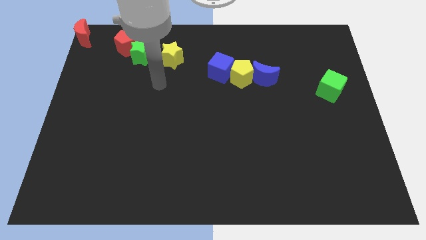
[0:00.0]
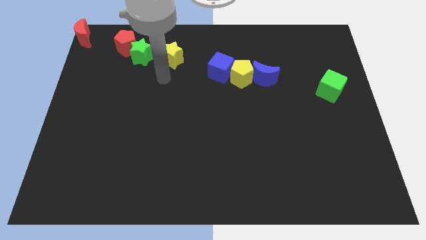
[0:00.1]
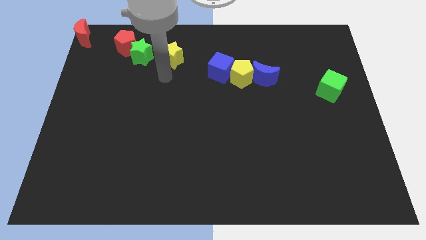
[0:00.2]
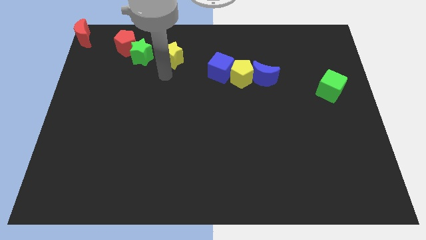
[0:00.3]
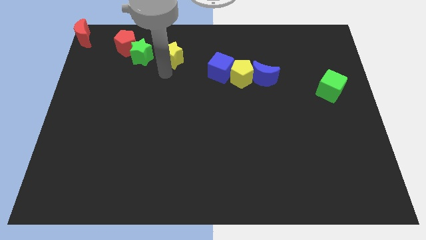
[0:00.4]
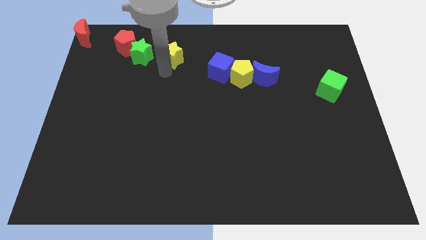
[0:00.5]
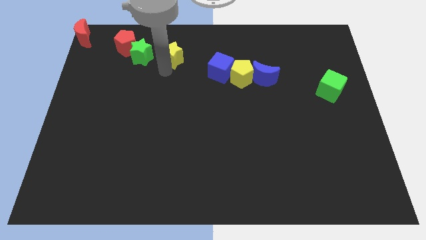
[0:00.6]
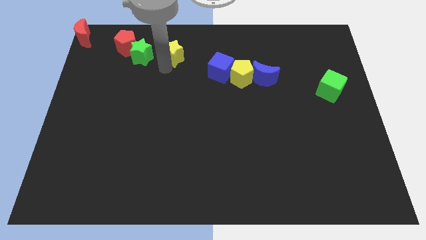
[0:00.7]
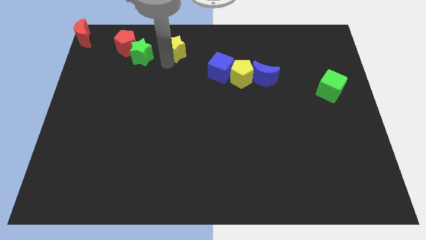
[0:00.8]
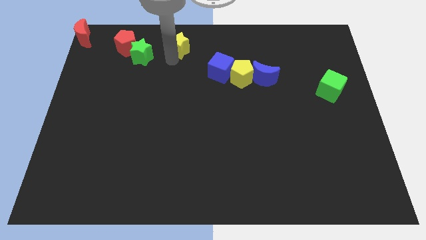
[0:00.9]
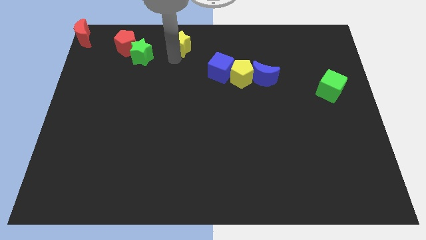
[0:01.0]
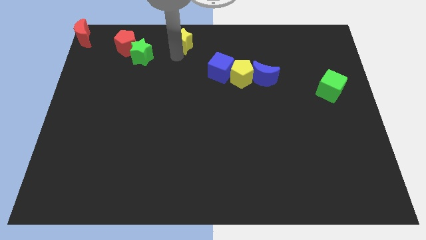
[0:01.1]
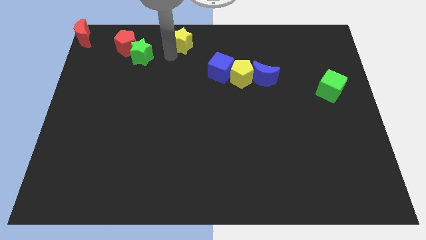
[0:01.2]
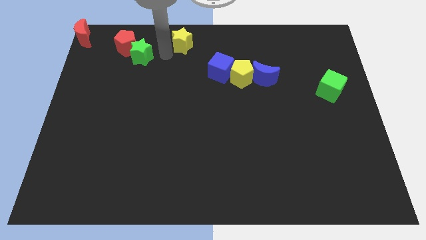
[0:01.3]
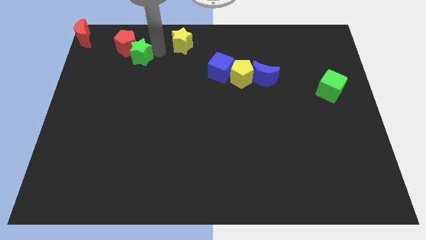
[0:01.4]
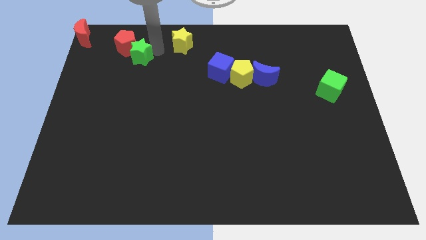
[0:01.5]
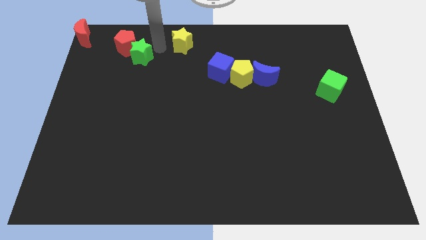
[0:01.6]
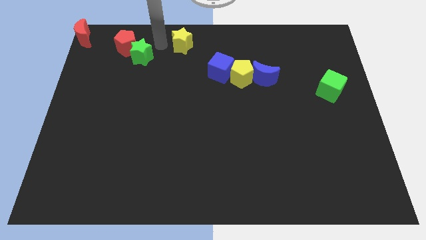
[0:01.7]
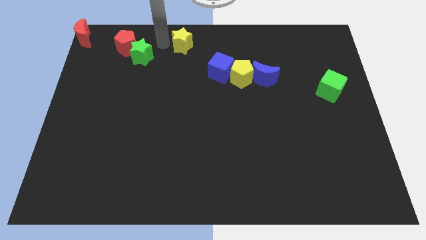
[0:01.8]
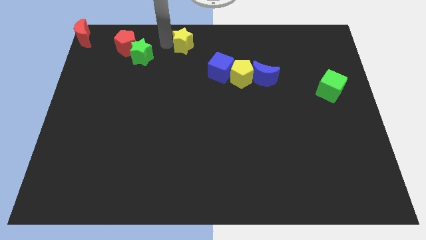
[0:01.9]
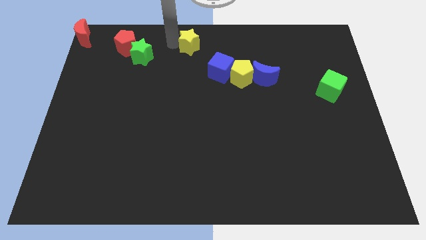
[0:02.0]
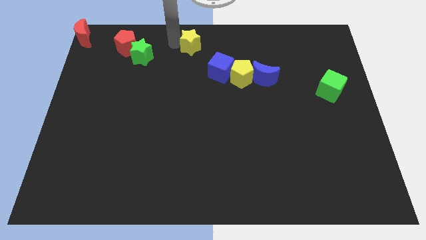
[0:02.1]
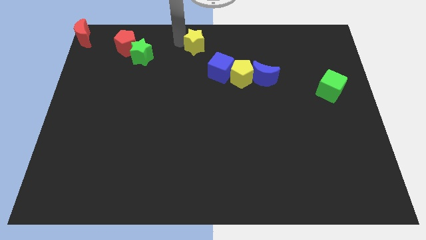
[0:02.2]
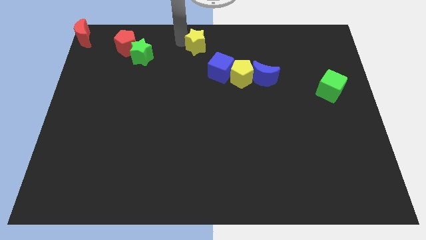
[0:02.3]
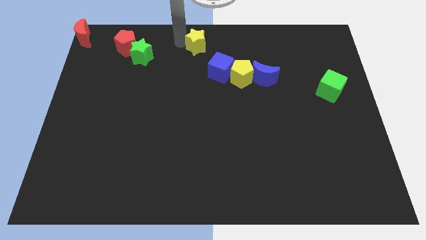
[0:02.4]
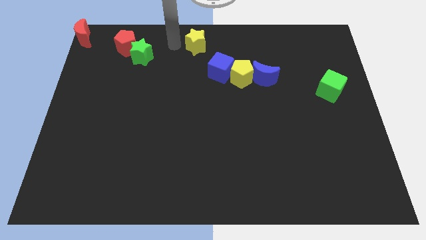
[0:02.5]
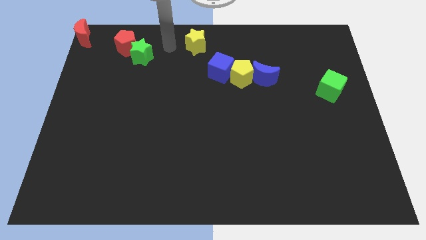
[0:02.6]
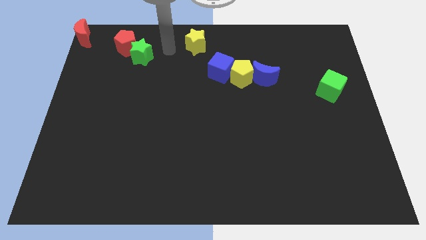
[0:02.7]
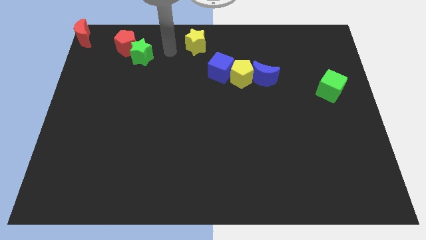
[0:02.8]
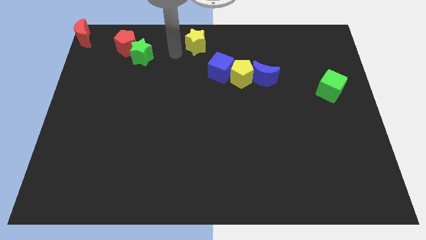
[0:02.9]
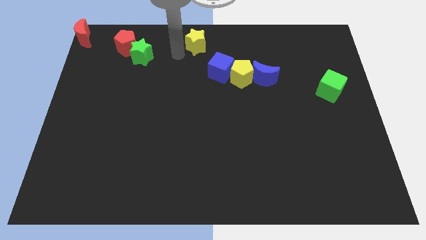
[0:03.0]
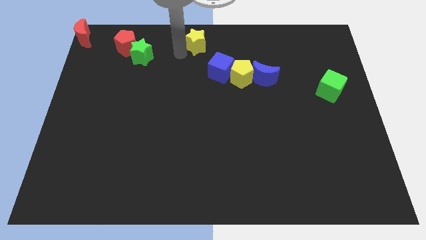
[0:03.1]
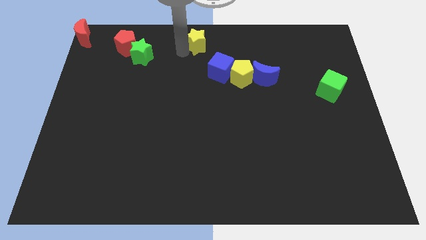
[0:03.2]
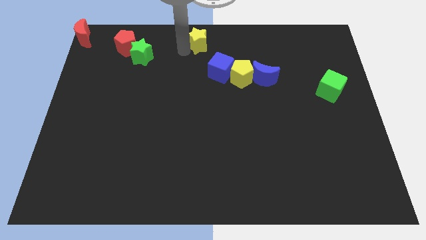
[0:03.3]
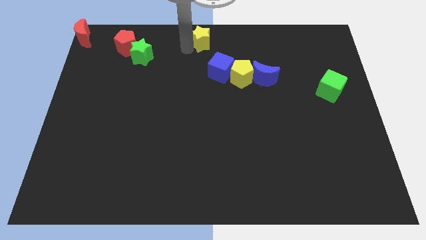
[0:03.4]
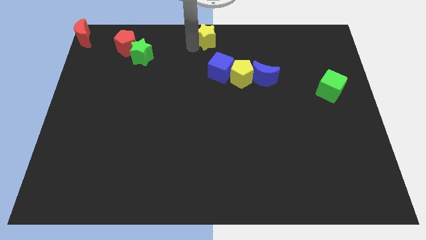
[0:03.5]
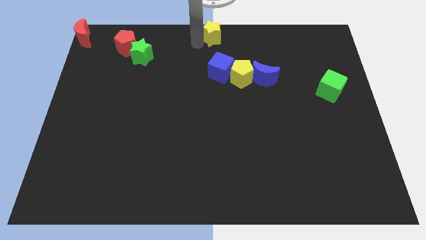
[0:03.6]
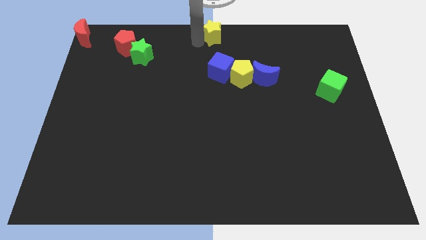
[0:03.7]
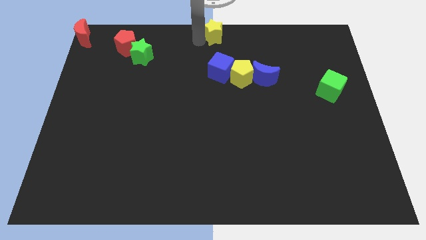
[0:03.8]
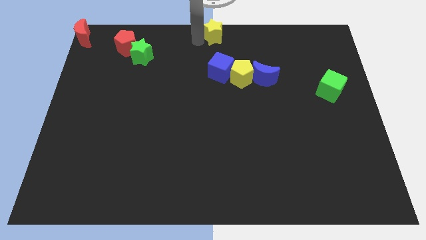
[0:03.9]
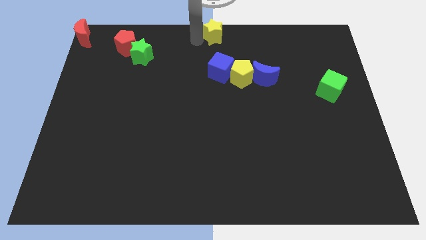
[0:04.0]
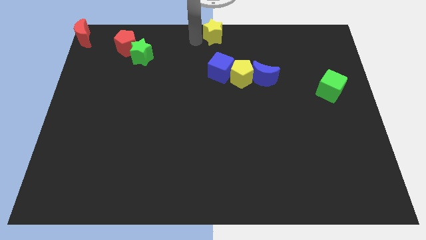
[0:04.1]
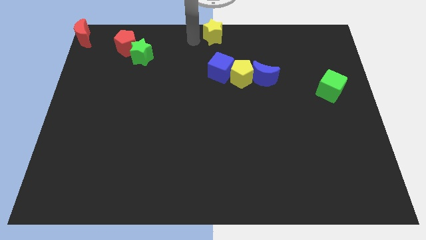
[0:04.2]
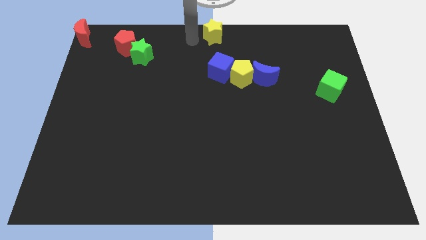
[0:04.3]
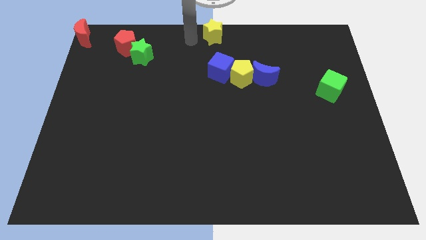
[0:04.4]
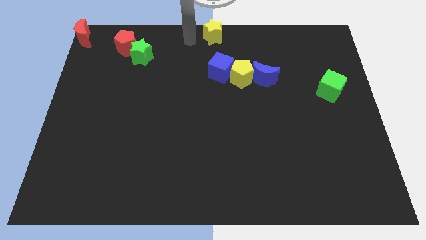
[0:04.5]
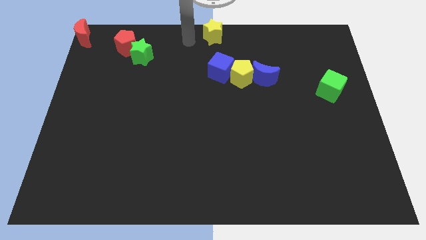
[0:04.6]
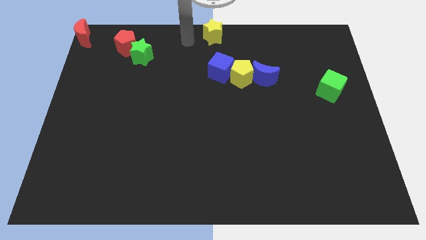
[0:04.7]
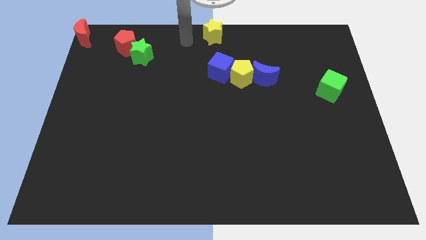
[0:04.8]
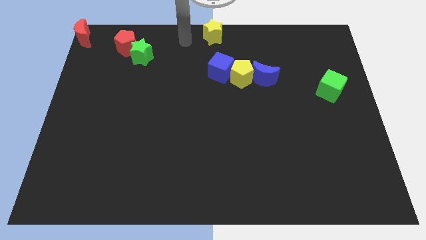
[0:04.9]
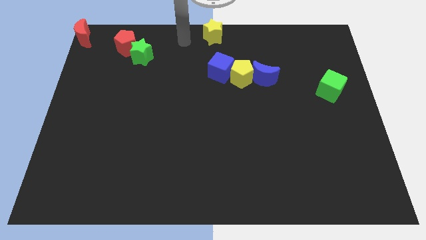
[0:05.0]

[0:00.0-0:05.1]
place yellow star to the top center

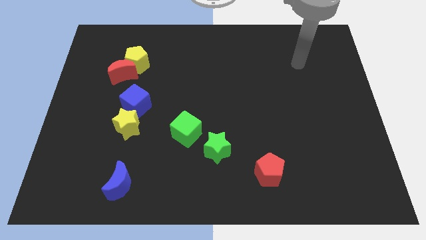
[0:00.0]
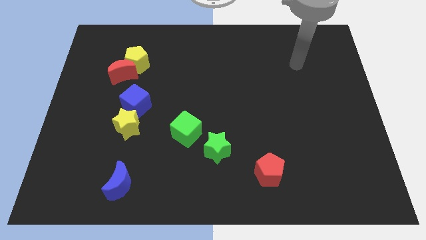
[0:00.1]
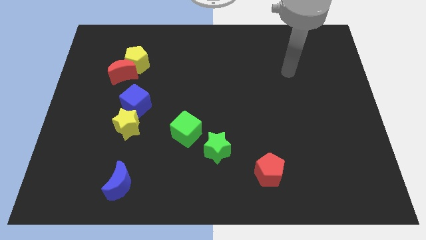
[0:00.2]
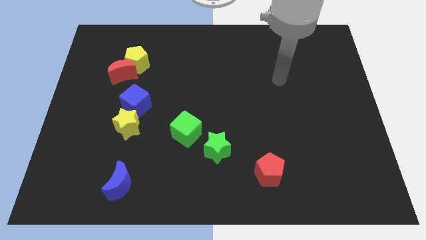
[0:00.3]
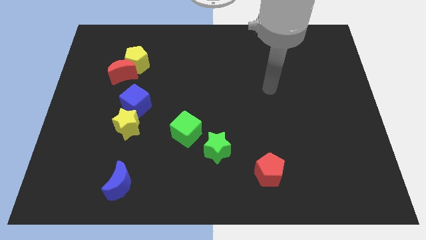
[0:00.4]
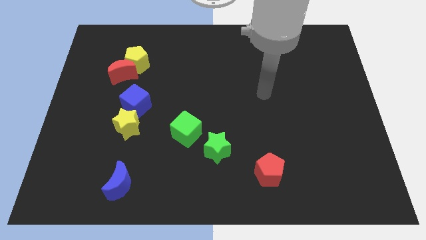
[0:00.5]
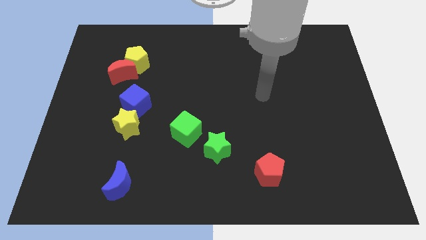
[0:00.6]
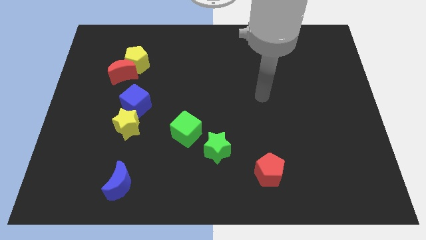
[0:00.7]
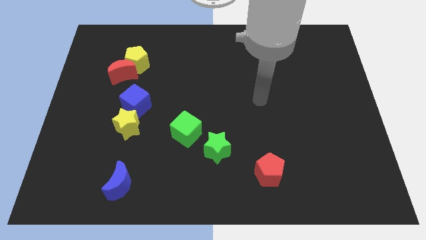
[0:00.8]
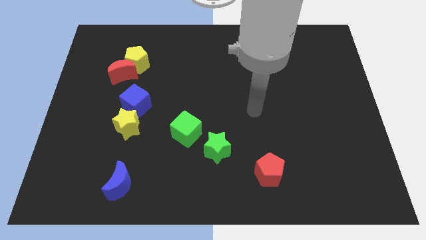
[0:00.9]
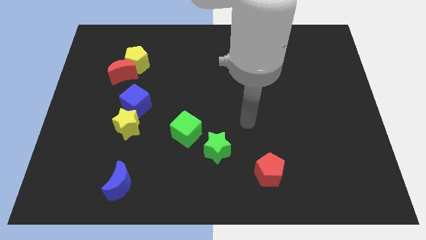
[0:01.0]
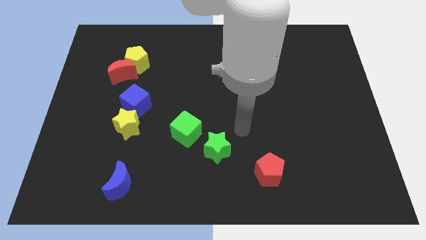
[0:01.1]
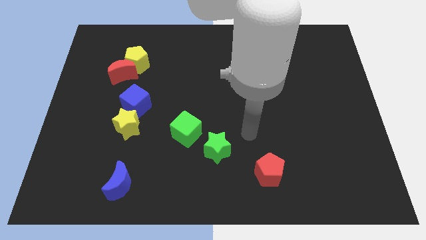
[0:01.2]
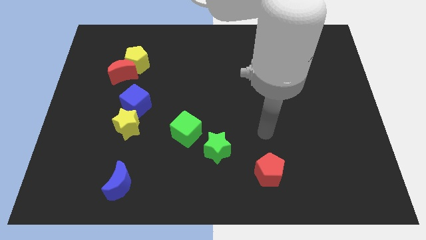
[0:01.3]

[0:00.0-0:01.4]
point your arm at the top of the red pentagon

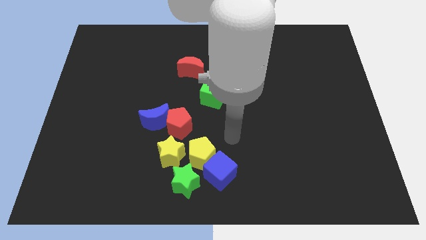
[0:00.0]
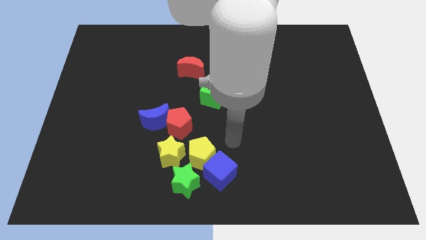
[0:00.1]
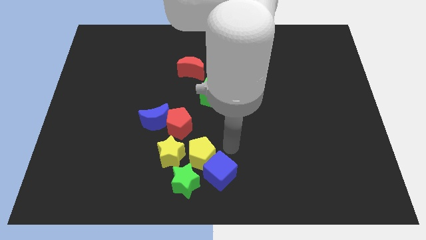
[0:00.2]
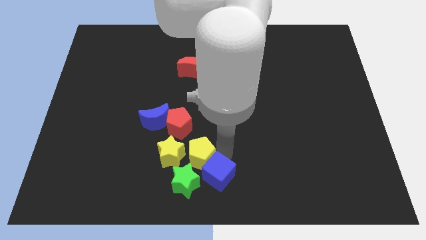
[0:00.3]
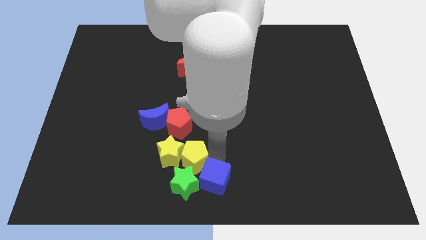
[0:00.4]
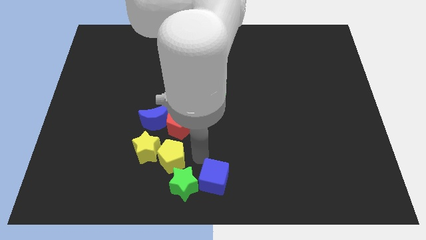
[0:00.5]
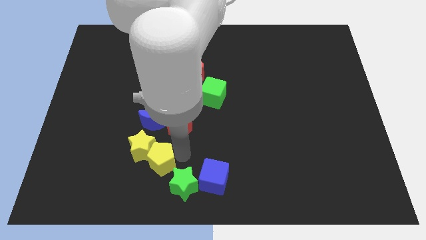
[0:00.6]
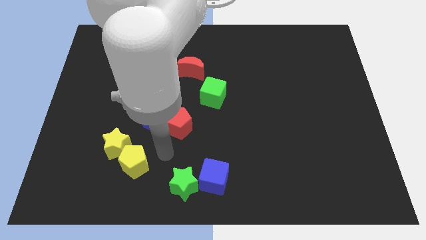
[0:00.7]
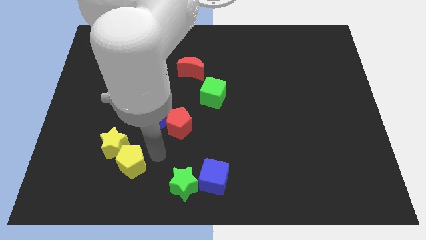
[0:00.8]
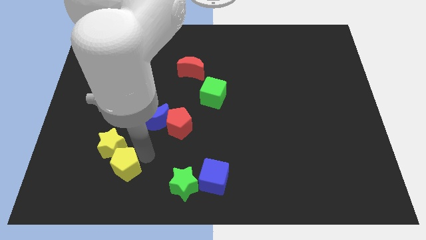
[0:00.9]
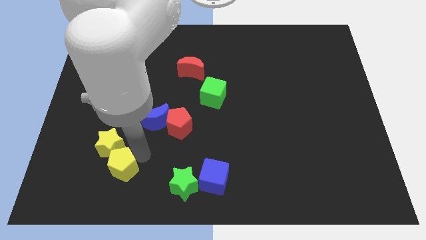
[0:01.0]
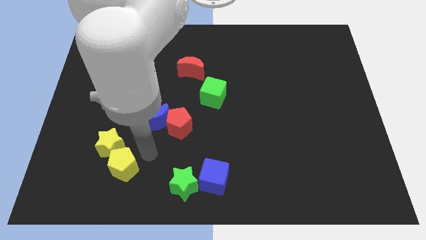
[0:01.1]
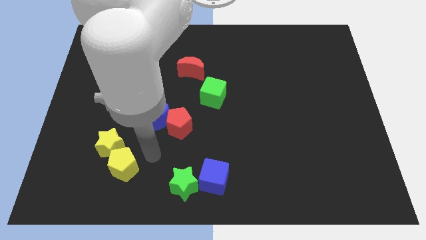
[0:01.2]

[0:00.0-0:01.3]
push the yellow block to the left side

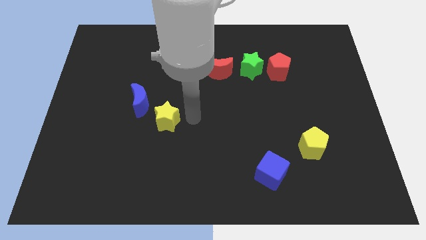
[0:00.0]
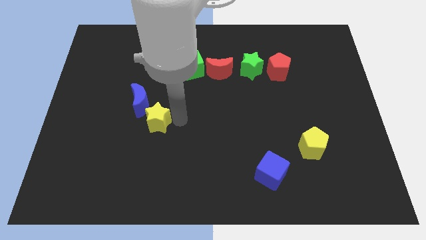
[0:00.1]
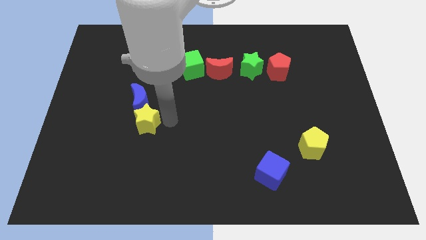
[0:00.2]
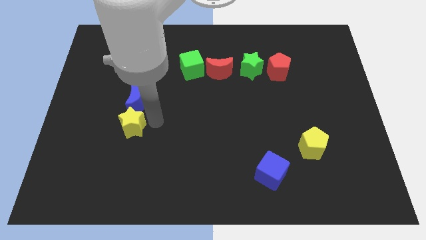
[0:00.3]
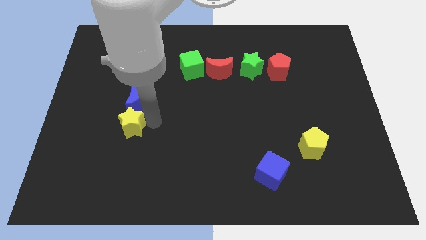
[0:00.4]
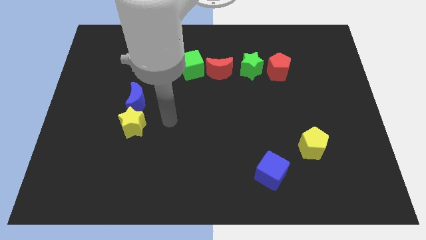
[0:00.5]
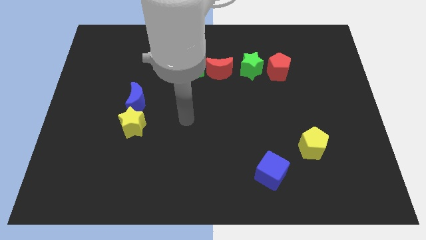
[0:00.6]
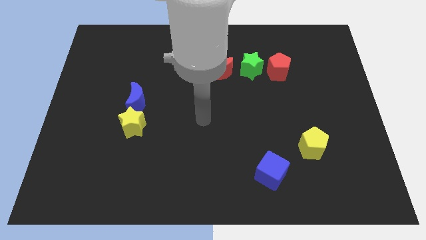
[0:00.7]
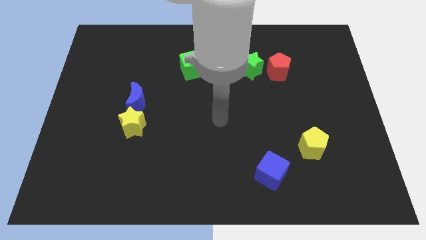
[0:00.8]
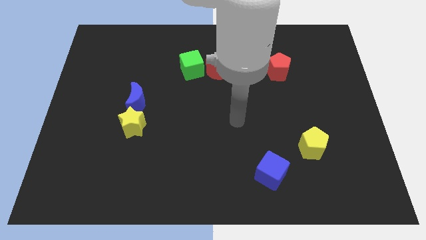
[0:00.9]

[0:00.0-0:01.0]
drag the yellow star and place it below the blue moon

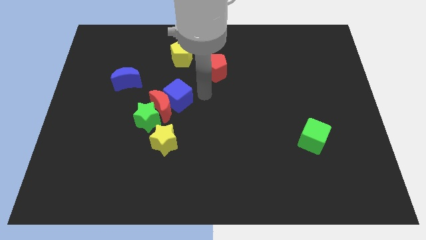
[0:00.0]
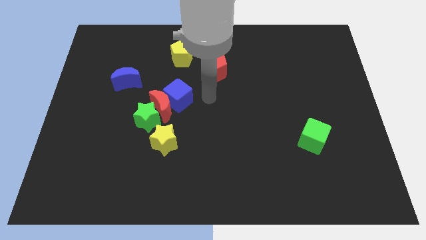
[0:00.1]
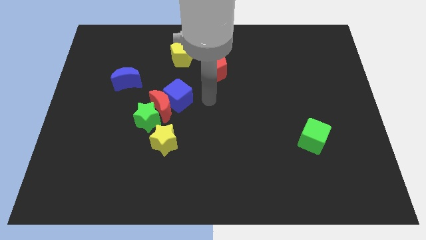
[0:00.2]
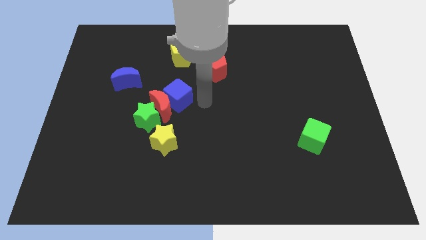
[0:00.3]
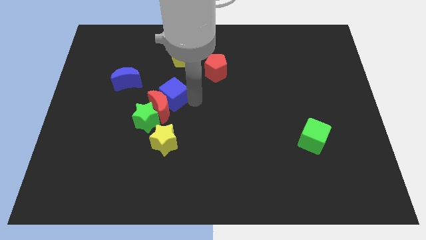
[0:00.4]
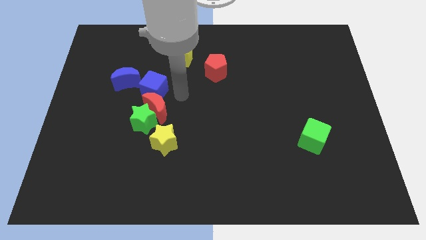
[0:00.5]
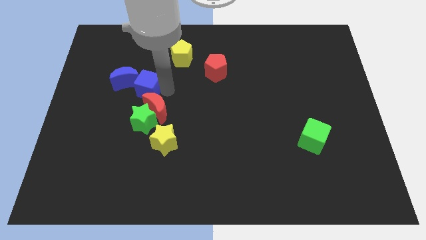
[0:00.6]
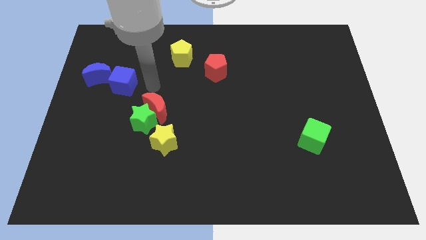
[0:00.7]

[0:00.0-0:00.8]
push the blue cube into the blue crescent
